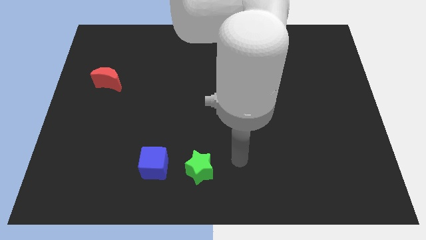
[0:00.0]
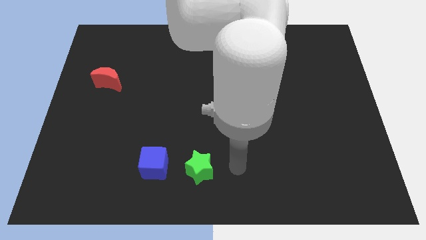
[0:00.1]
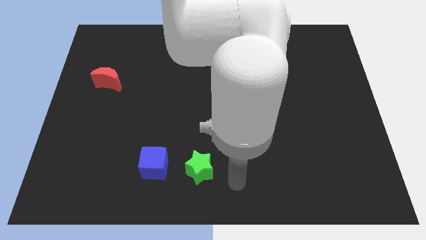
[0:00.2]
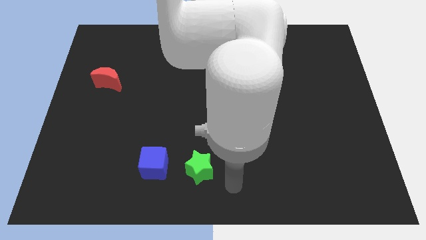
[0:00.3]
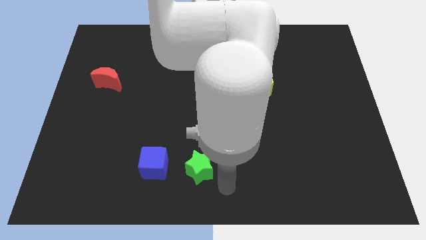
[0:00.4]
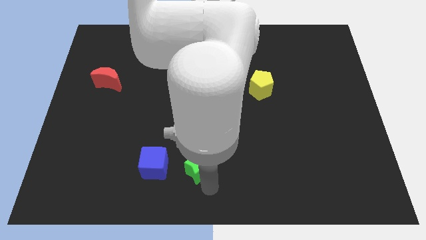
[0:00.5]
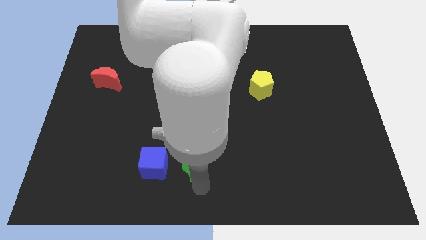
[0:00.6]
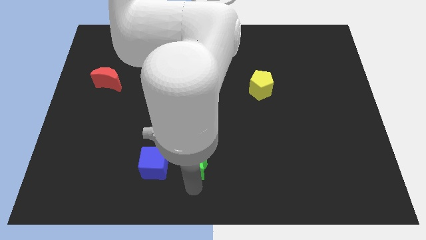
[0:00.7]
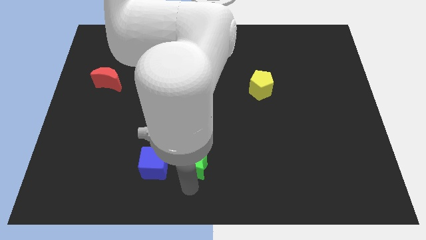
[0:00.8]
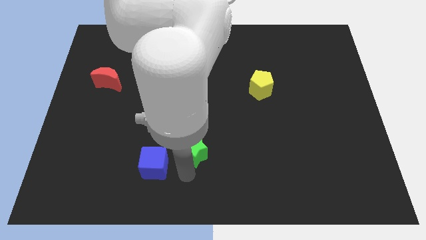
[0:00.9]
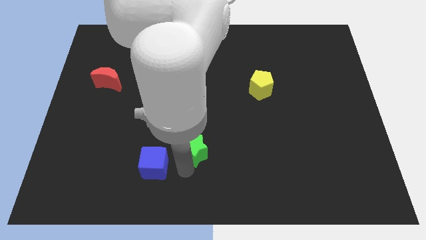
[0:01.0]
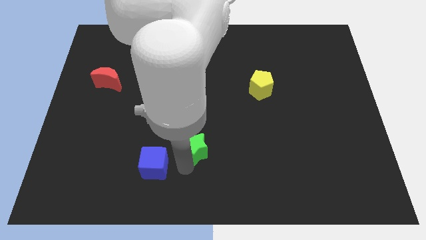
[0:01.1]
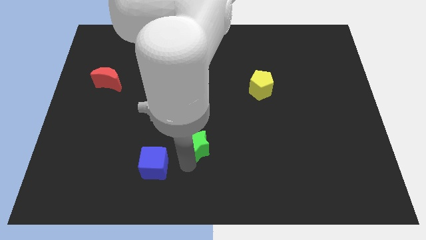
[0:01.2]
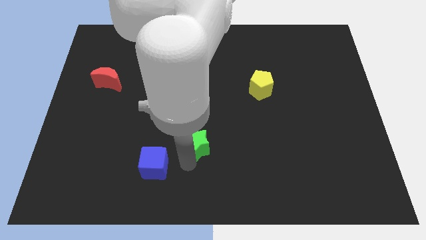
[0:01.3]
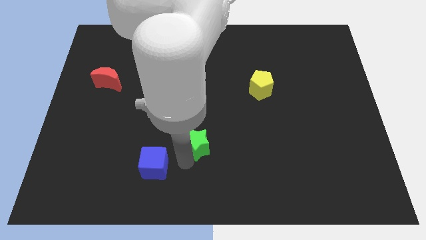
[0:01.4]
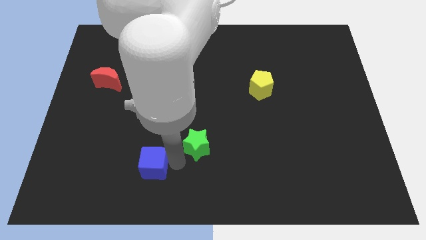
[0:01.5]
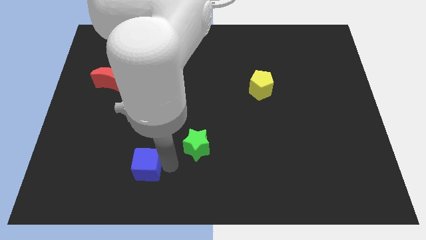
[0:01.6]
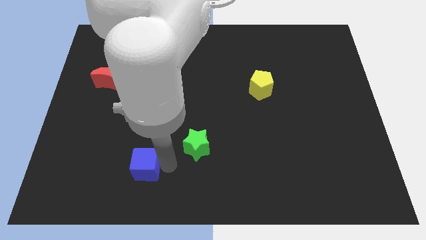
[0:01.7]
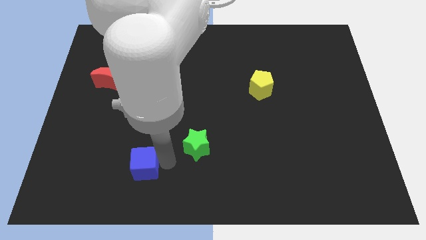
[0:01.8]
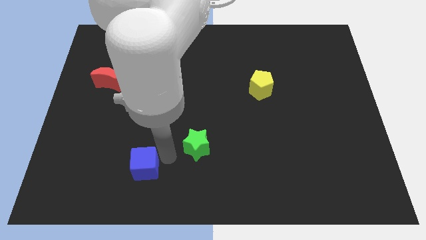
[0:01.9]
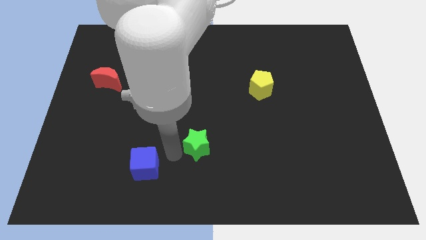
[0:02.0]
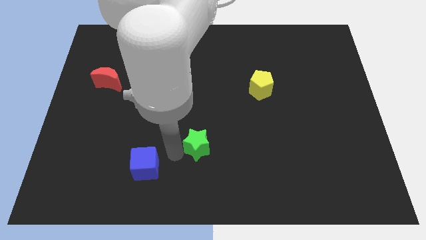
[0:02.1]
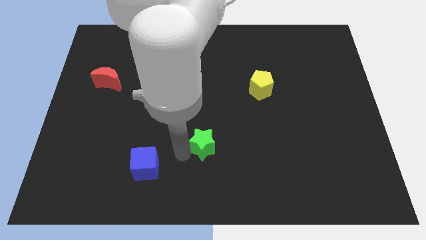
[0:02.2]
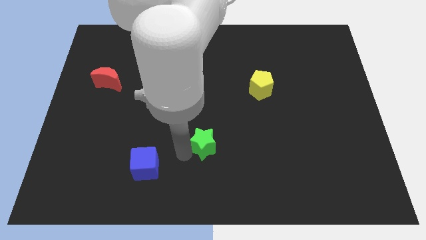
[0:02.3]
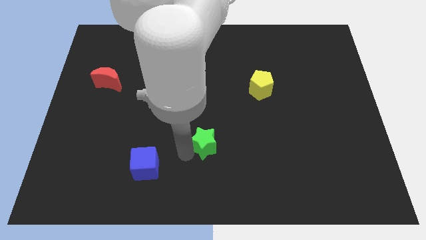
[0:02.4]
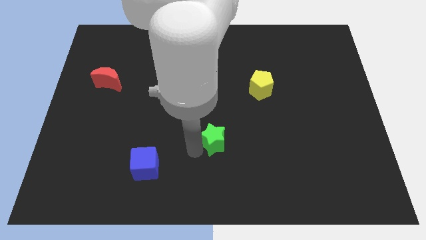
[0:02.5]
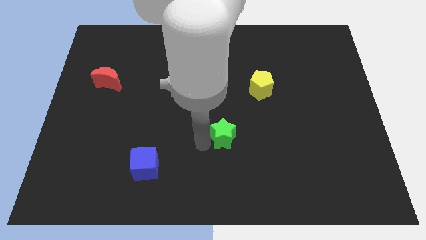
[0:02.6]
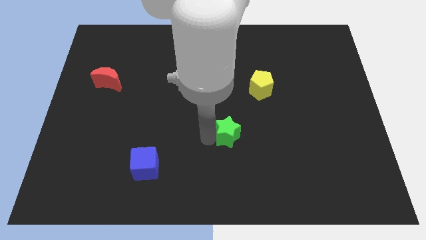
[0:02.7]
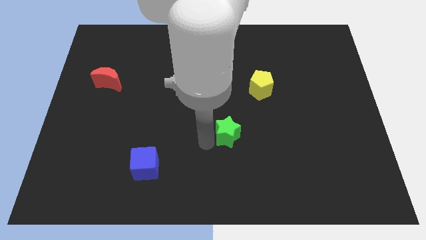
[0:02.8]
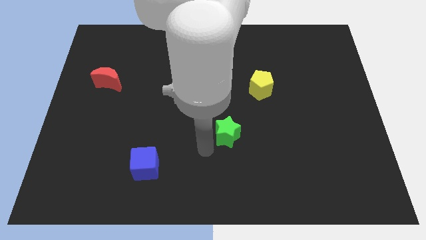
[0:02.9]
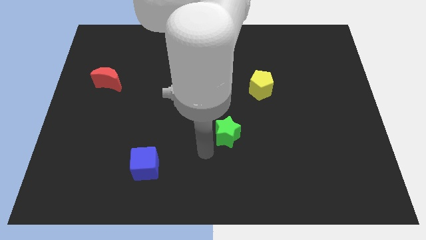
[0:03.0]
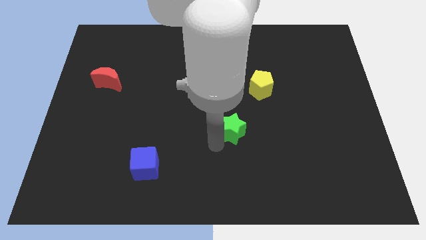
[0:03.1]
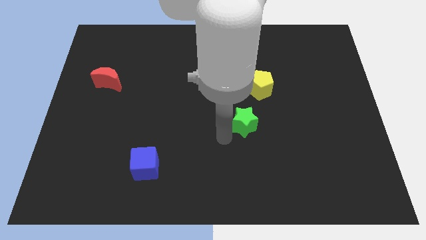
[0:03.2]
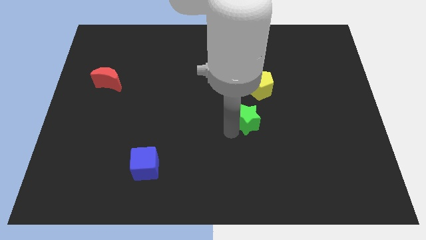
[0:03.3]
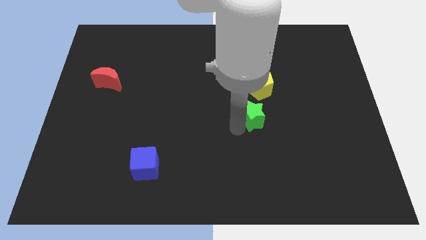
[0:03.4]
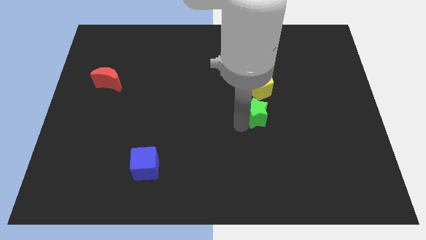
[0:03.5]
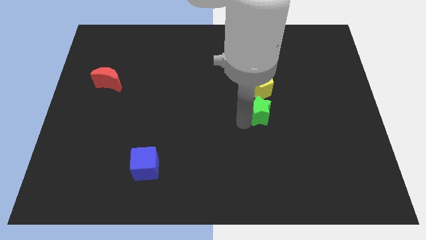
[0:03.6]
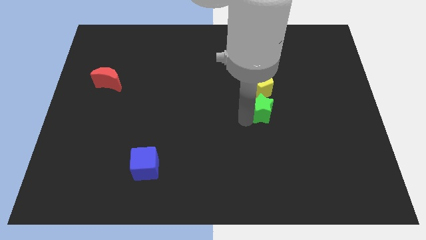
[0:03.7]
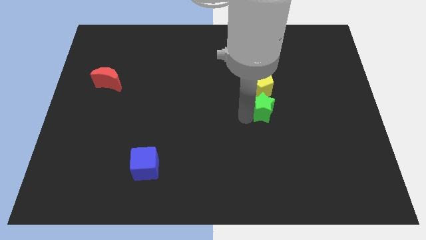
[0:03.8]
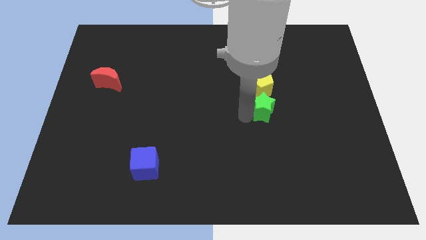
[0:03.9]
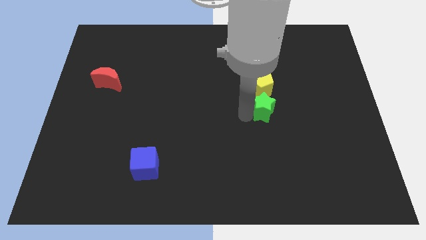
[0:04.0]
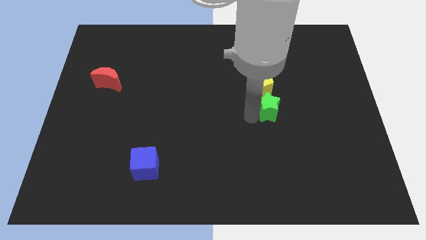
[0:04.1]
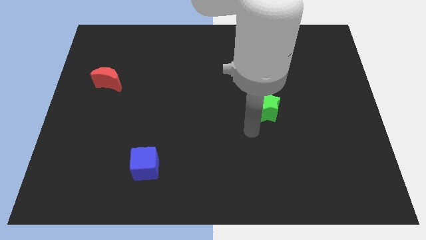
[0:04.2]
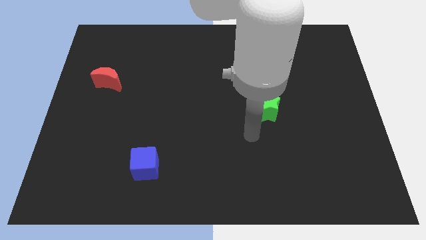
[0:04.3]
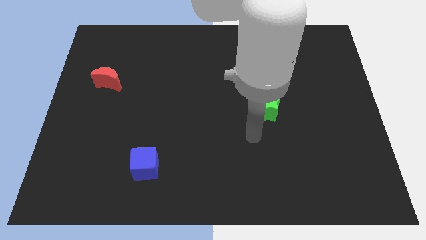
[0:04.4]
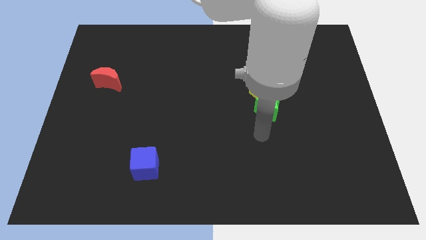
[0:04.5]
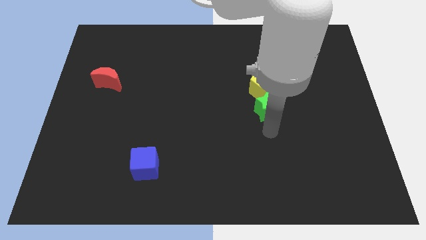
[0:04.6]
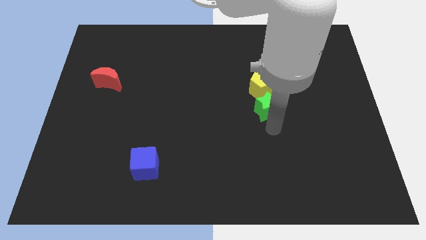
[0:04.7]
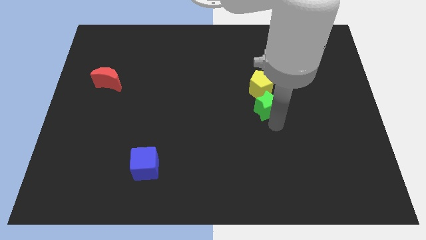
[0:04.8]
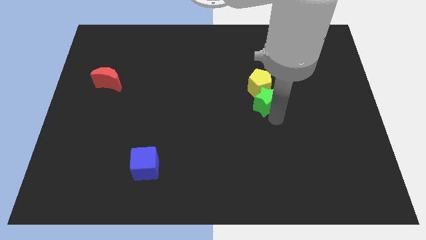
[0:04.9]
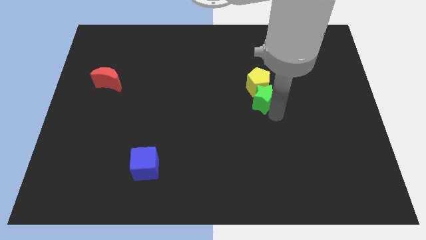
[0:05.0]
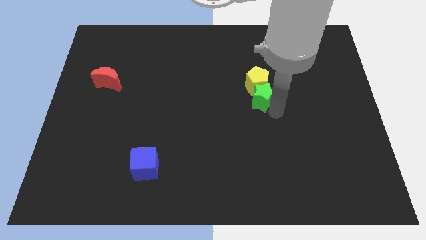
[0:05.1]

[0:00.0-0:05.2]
slide the star towards the yellow block

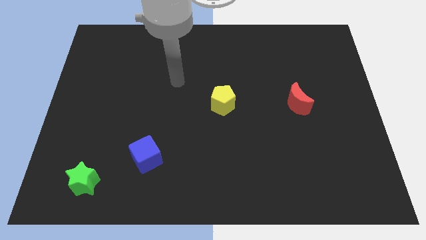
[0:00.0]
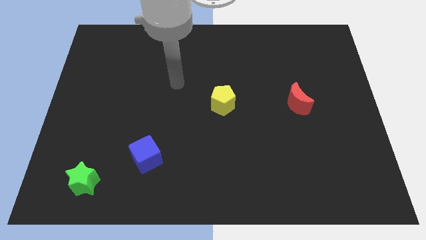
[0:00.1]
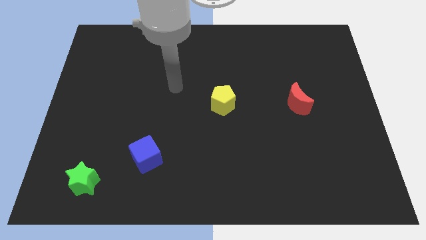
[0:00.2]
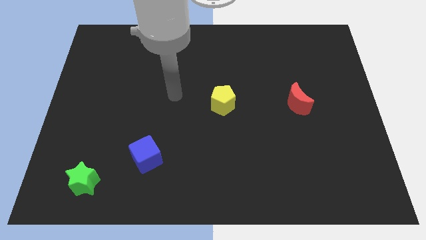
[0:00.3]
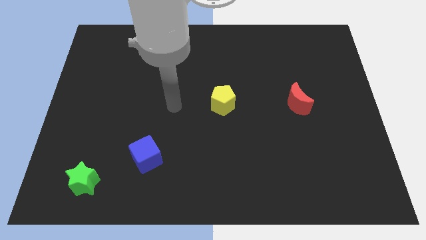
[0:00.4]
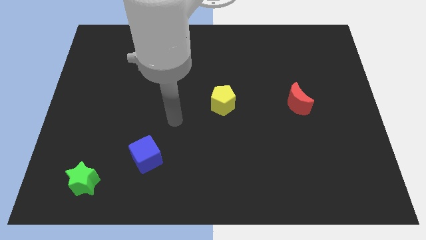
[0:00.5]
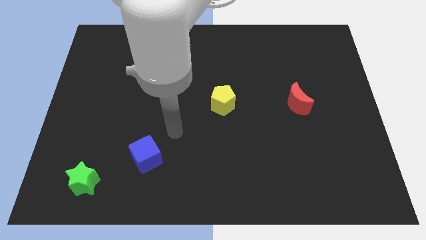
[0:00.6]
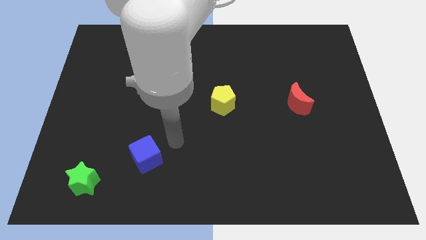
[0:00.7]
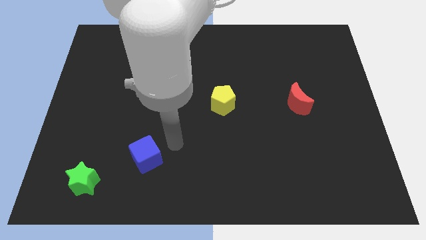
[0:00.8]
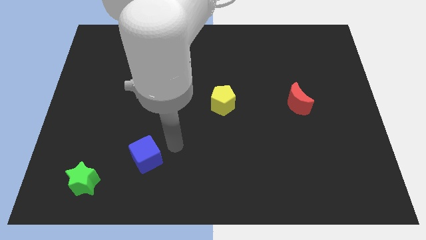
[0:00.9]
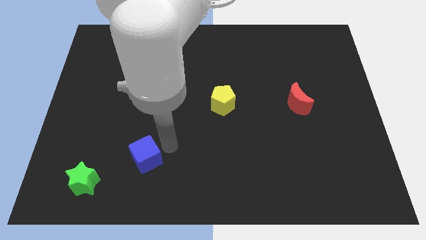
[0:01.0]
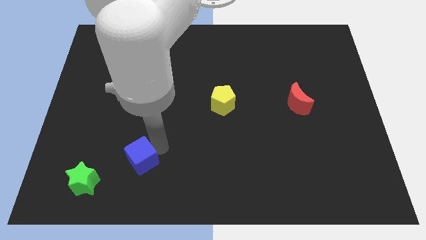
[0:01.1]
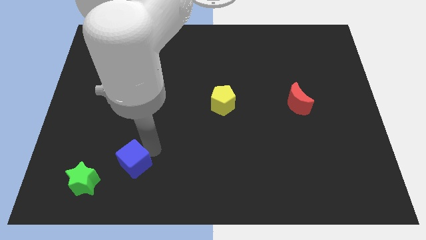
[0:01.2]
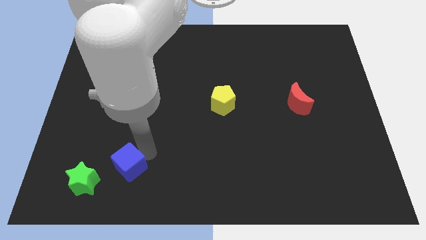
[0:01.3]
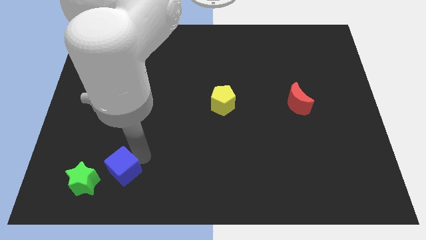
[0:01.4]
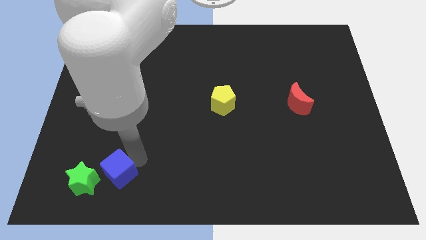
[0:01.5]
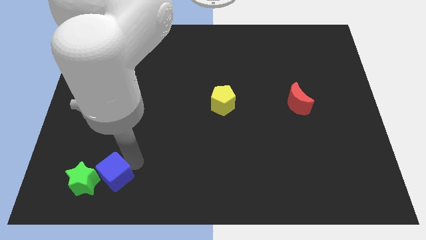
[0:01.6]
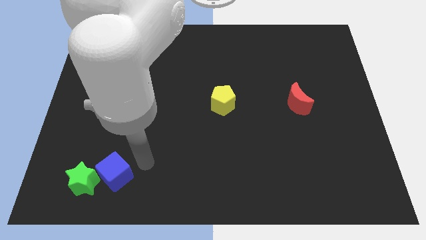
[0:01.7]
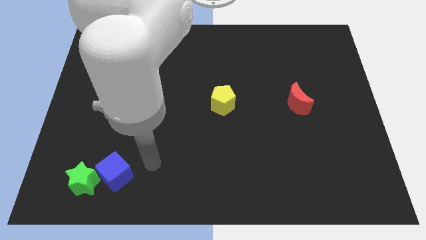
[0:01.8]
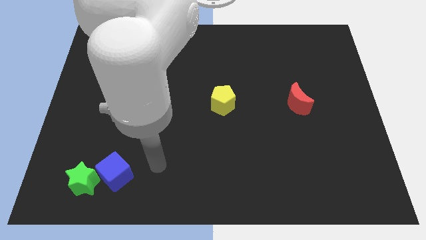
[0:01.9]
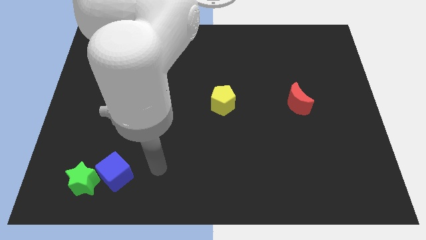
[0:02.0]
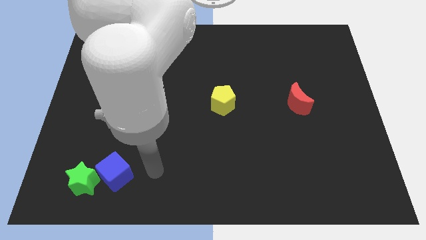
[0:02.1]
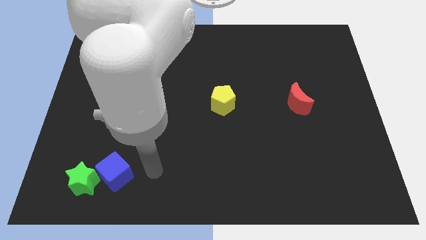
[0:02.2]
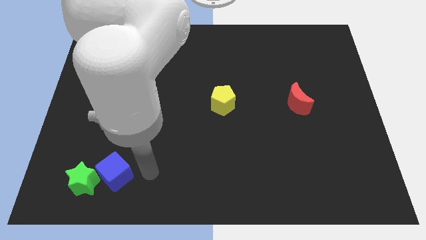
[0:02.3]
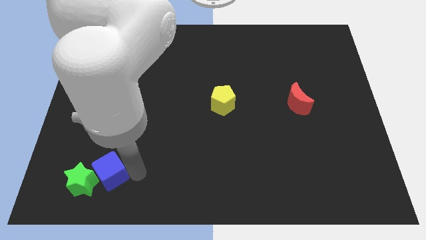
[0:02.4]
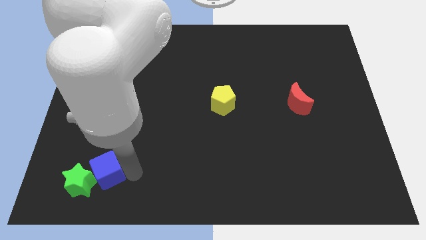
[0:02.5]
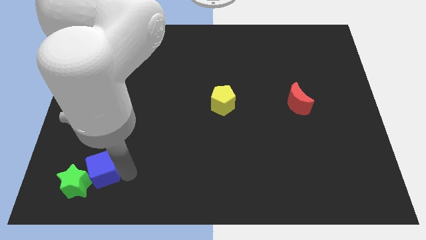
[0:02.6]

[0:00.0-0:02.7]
put the blue cube to the green block

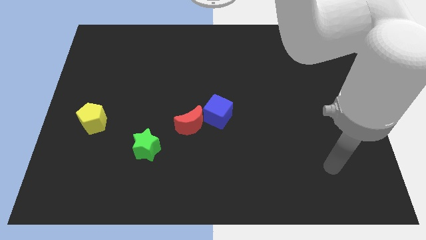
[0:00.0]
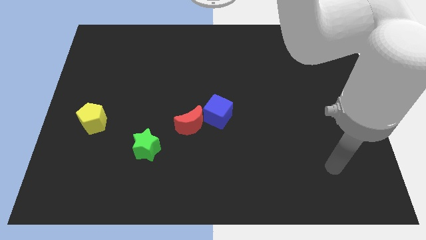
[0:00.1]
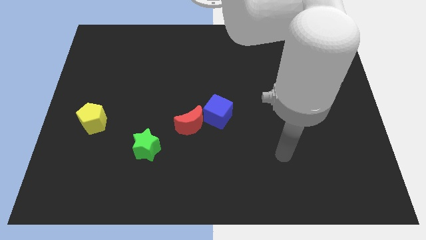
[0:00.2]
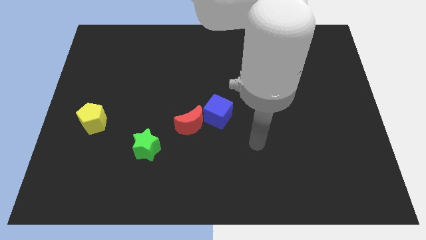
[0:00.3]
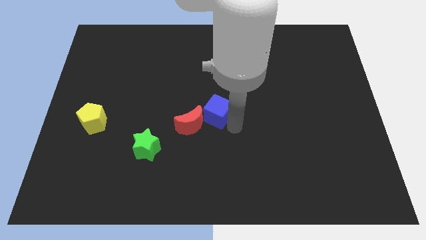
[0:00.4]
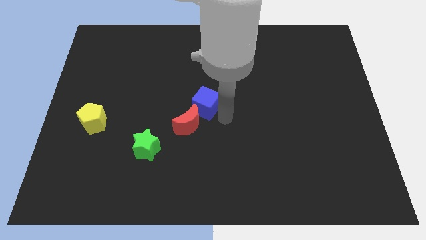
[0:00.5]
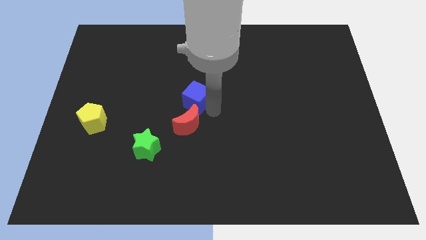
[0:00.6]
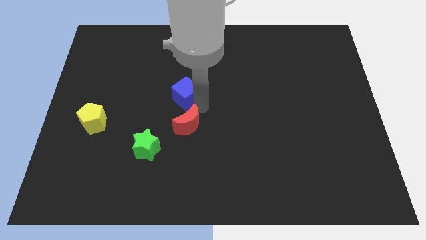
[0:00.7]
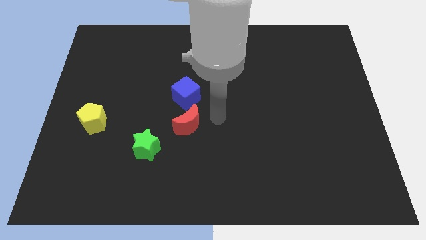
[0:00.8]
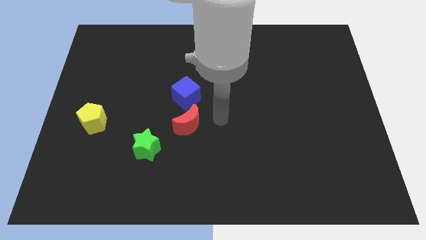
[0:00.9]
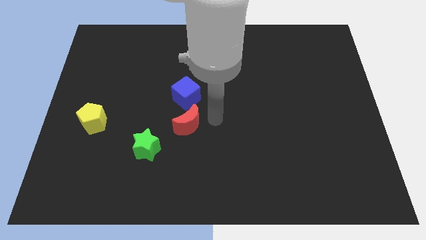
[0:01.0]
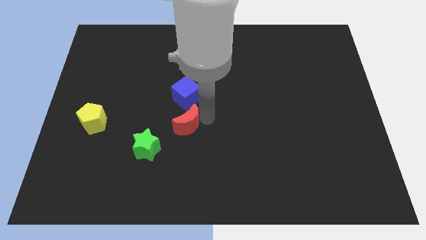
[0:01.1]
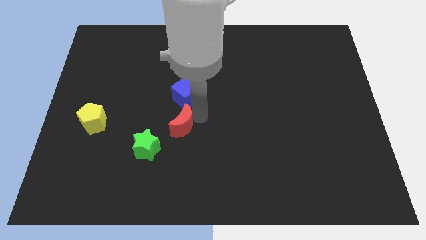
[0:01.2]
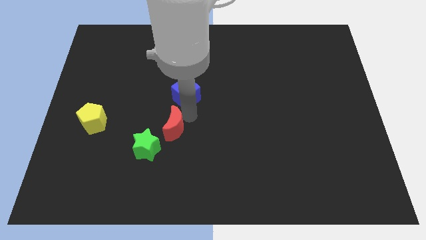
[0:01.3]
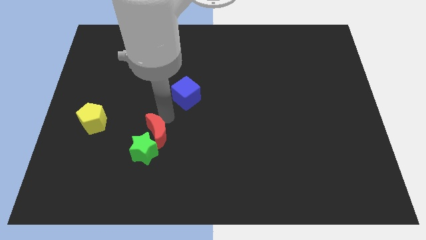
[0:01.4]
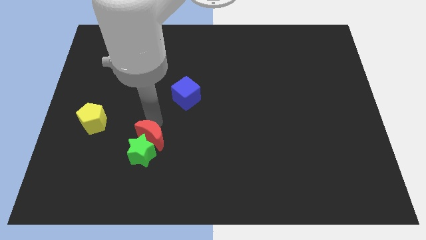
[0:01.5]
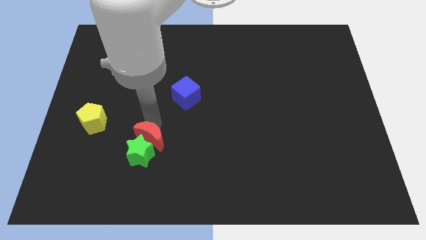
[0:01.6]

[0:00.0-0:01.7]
push the moon next to the green star
